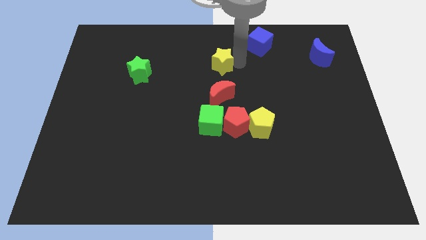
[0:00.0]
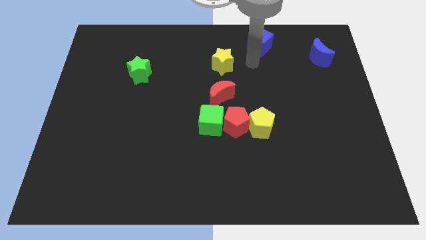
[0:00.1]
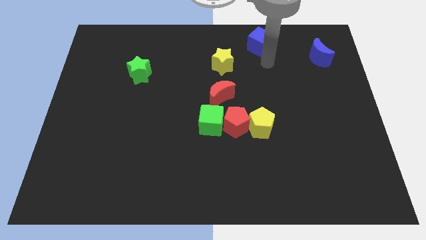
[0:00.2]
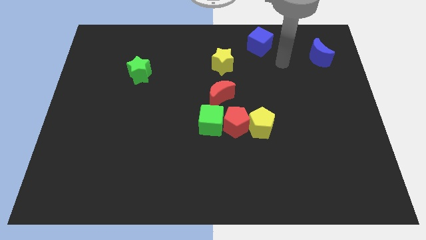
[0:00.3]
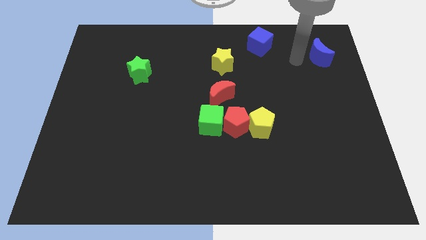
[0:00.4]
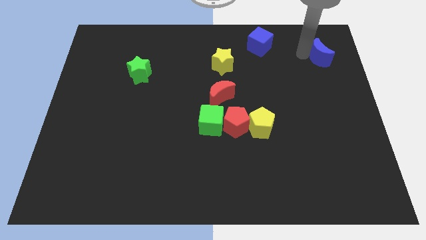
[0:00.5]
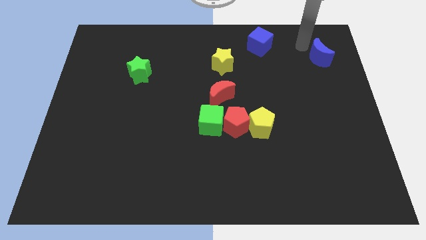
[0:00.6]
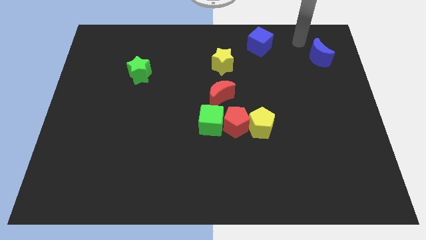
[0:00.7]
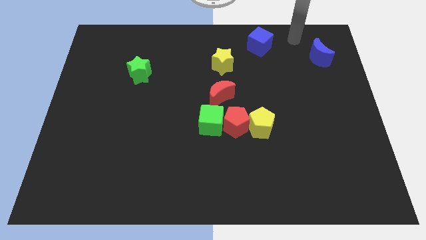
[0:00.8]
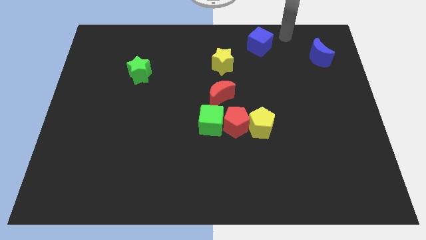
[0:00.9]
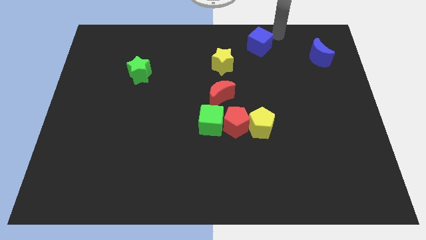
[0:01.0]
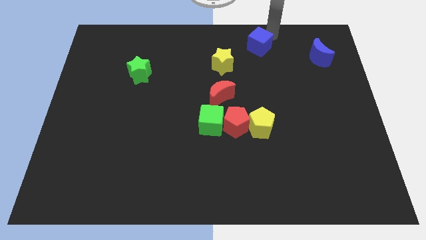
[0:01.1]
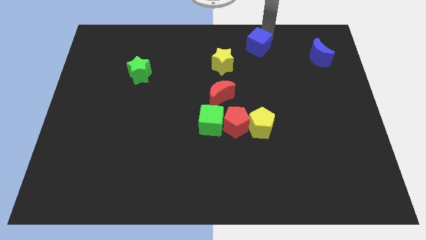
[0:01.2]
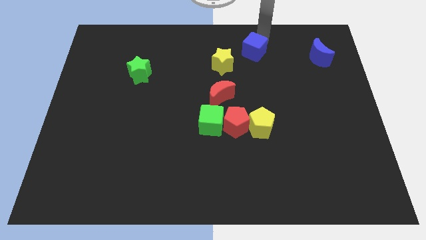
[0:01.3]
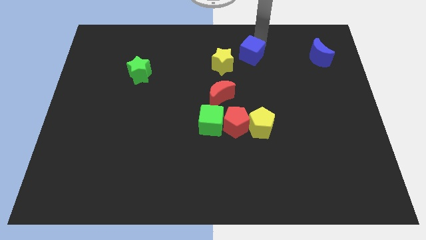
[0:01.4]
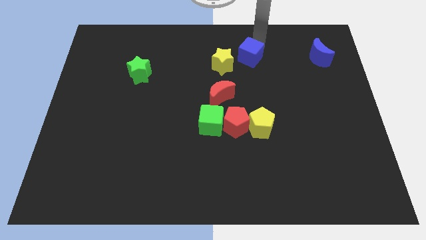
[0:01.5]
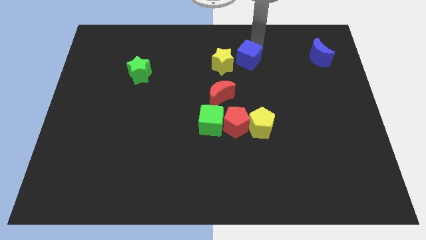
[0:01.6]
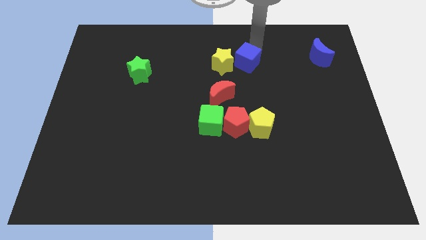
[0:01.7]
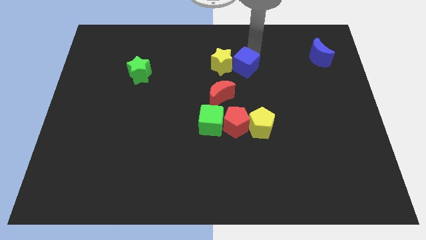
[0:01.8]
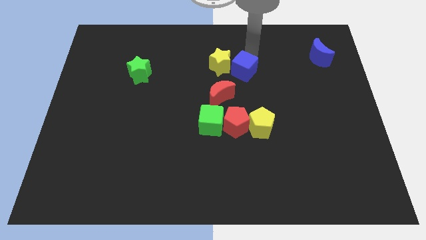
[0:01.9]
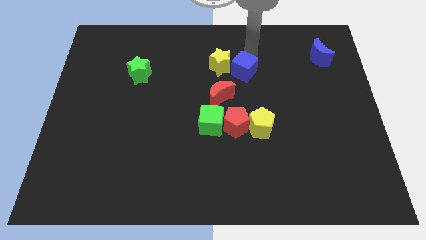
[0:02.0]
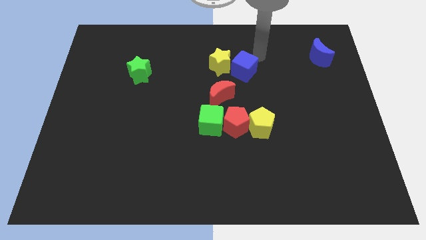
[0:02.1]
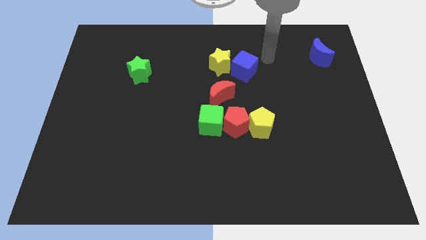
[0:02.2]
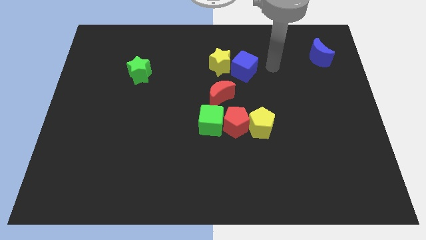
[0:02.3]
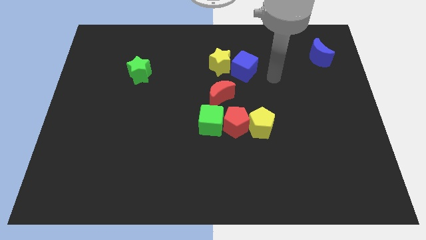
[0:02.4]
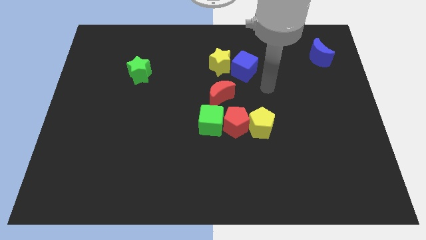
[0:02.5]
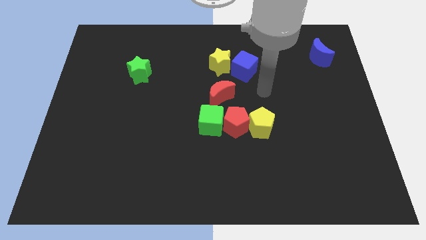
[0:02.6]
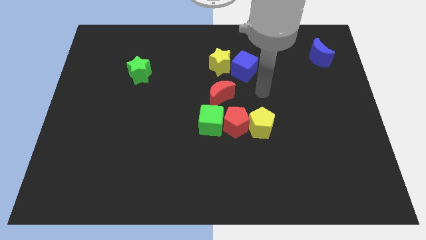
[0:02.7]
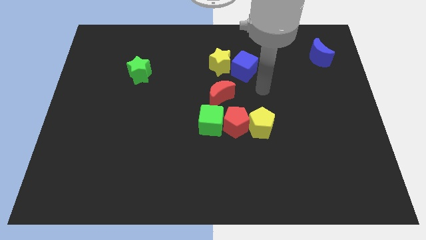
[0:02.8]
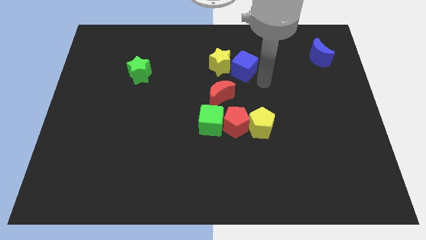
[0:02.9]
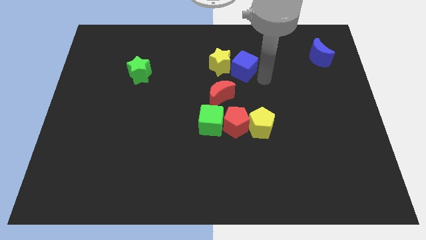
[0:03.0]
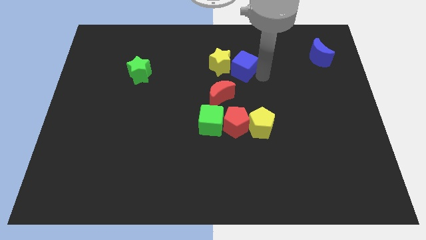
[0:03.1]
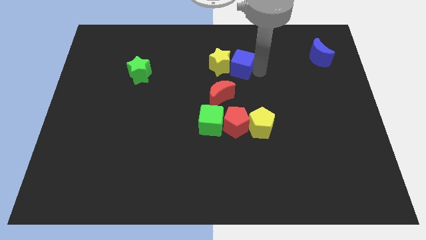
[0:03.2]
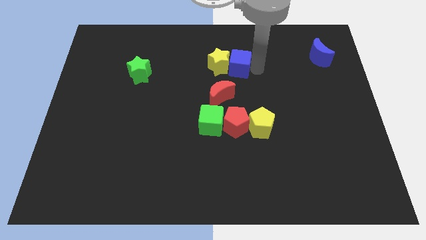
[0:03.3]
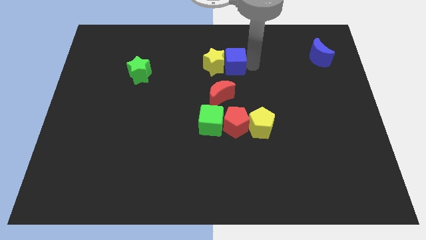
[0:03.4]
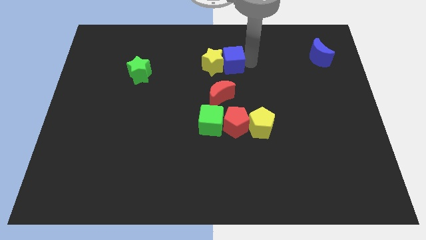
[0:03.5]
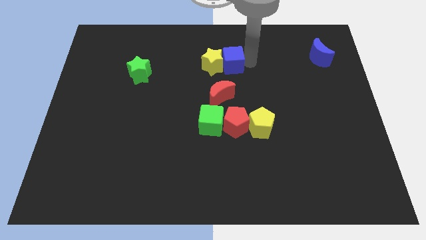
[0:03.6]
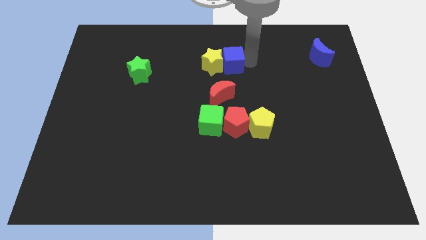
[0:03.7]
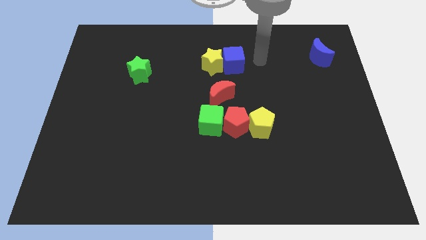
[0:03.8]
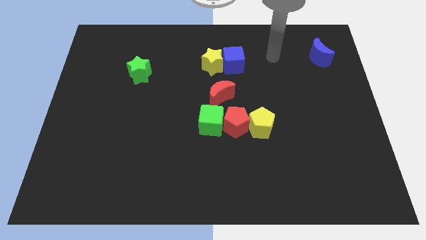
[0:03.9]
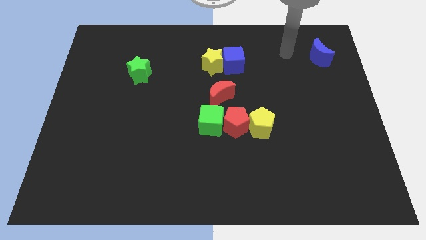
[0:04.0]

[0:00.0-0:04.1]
place the blue cube to the right of the yellow star

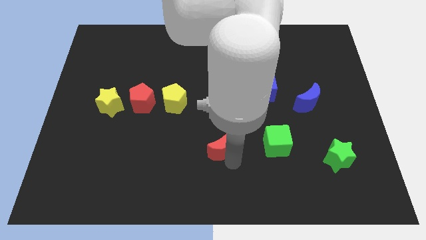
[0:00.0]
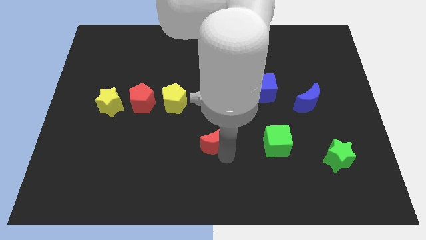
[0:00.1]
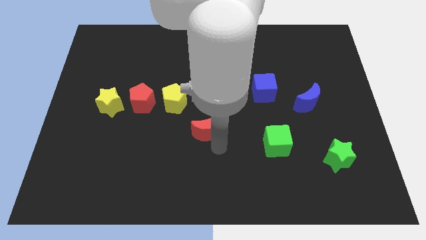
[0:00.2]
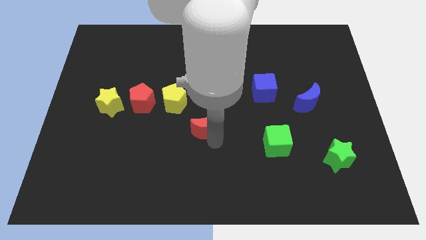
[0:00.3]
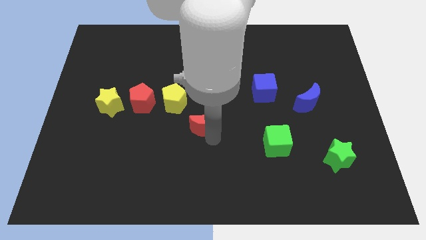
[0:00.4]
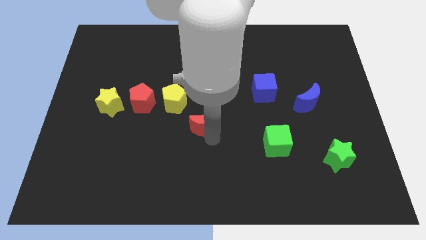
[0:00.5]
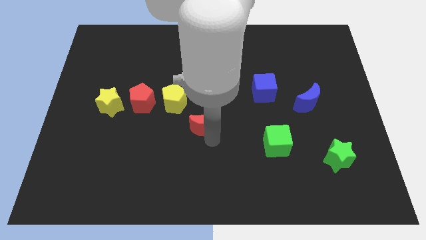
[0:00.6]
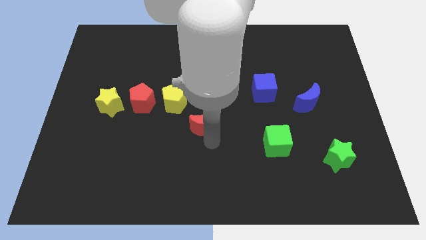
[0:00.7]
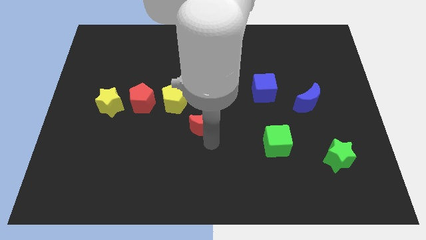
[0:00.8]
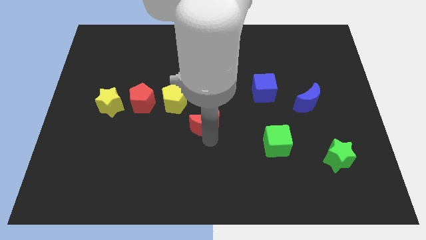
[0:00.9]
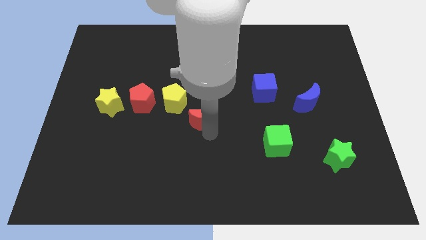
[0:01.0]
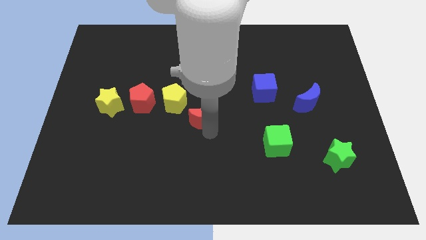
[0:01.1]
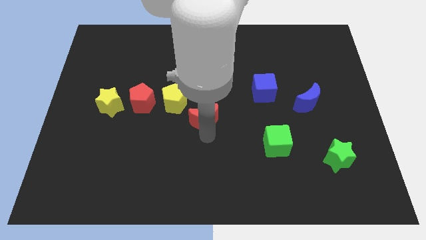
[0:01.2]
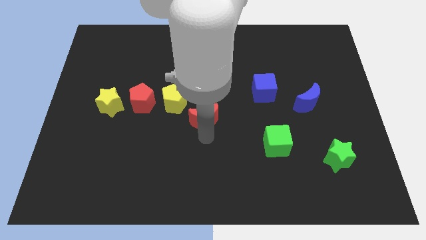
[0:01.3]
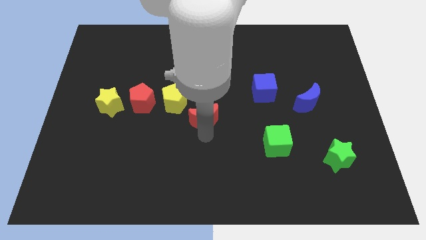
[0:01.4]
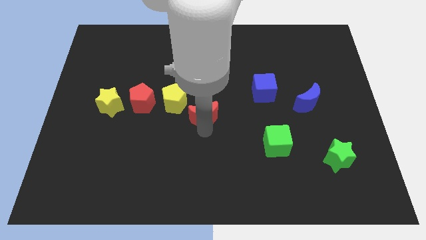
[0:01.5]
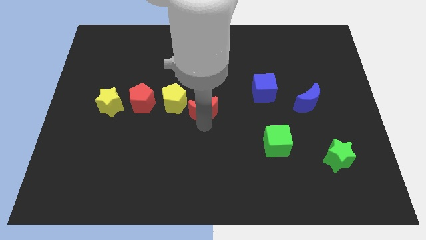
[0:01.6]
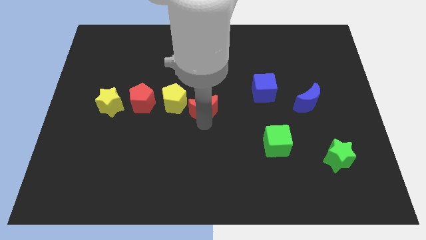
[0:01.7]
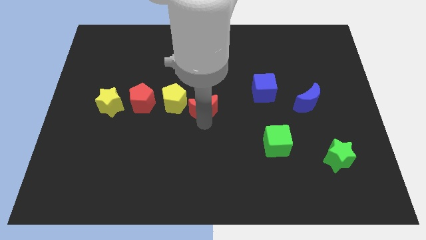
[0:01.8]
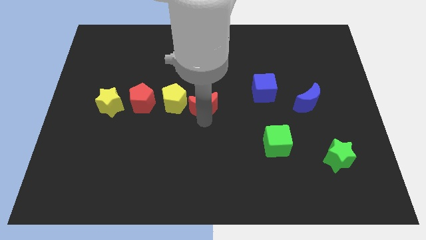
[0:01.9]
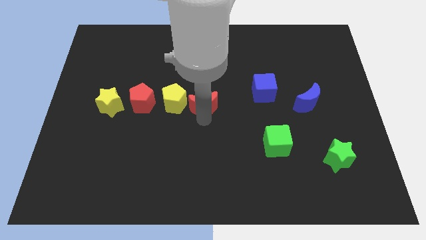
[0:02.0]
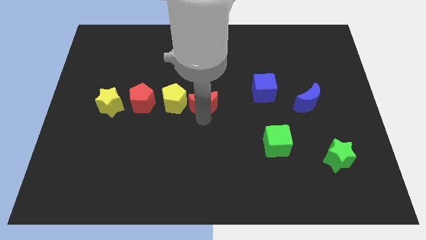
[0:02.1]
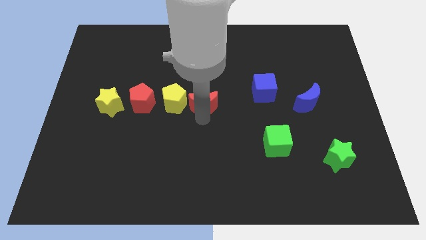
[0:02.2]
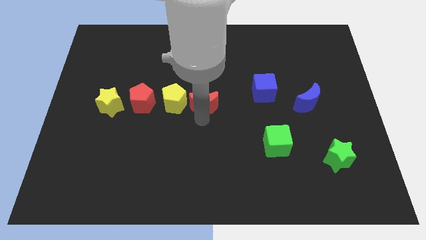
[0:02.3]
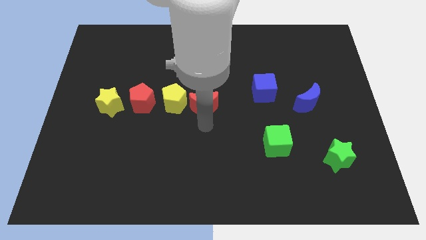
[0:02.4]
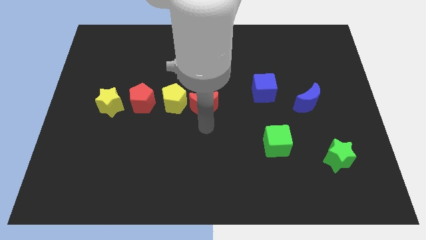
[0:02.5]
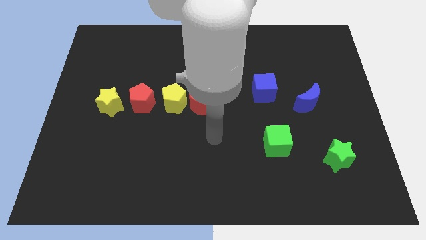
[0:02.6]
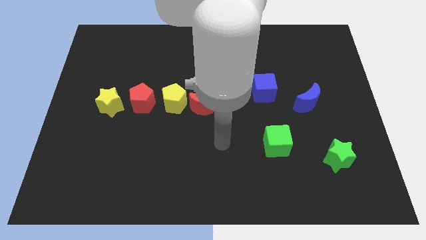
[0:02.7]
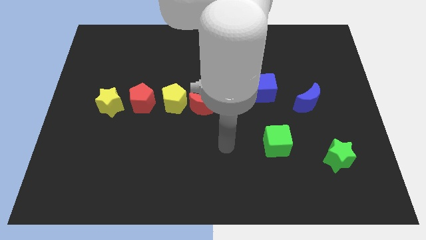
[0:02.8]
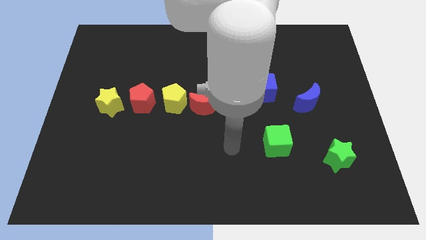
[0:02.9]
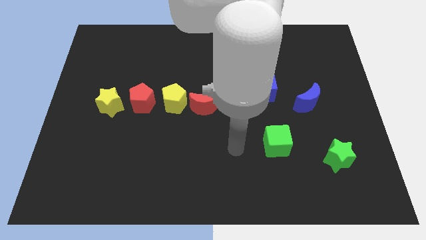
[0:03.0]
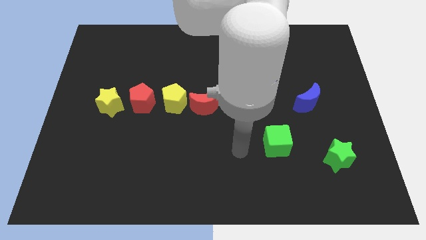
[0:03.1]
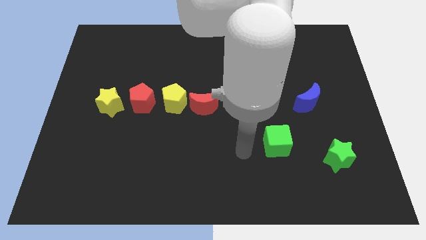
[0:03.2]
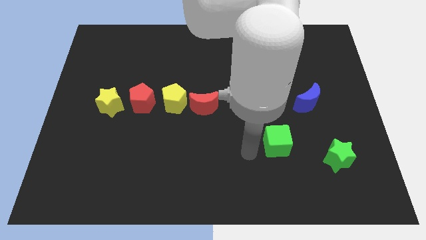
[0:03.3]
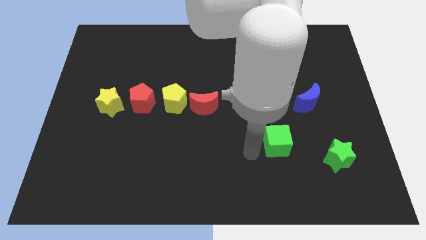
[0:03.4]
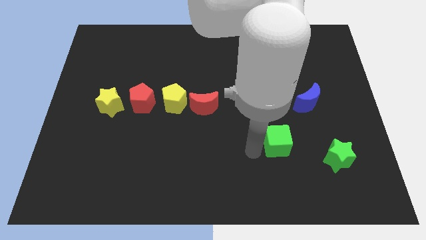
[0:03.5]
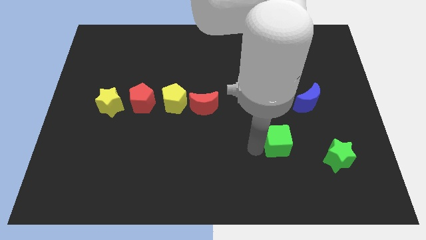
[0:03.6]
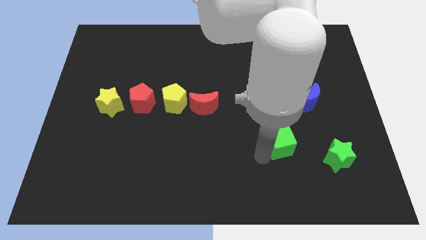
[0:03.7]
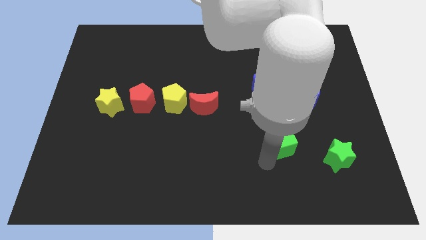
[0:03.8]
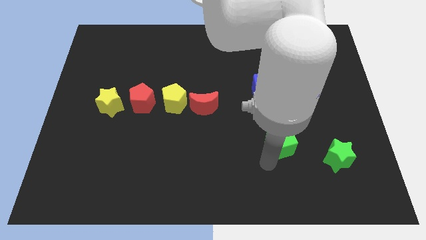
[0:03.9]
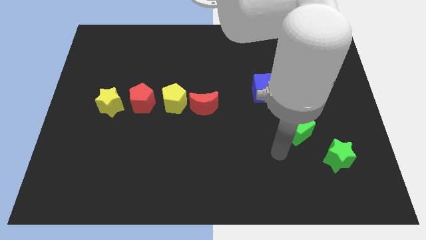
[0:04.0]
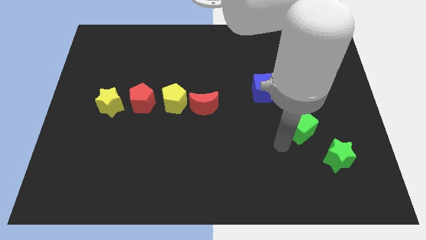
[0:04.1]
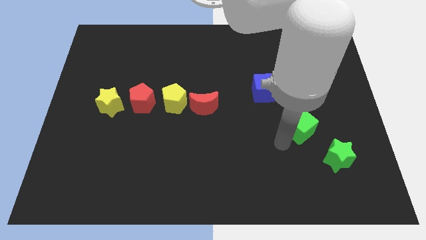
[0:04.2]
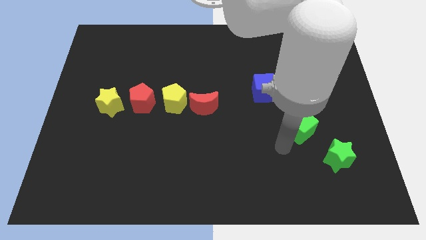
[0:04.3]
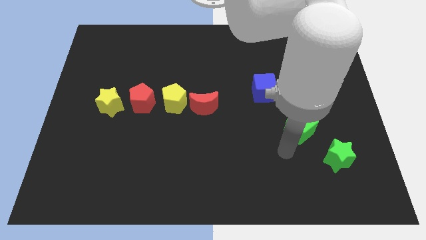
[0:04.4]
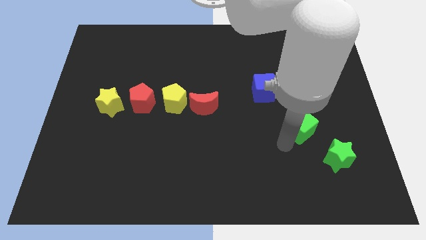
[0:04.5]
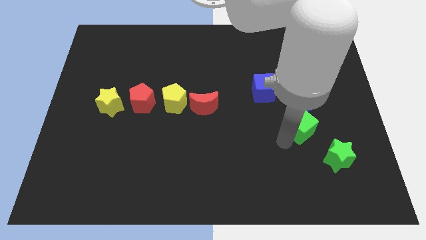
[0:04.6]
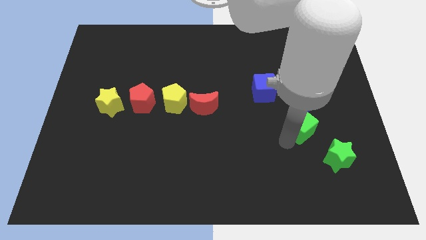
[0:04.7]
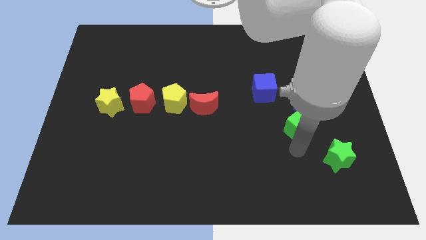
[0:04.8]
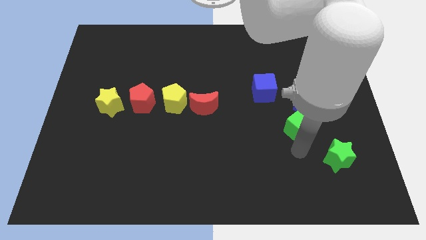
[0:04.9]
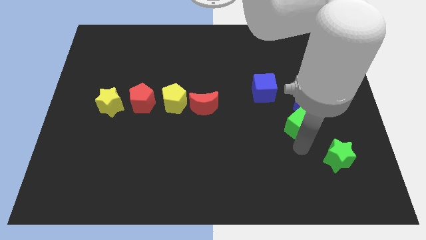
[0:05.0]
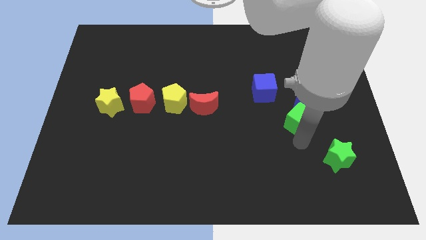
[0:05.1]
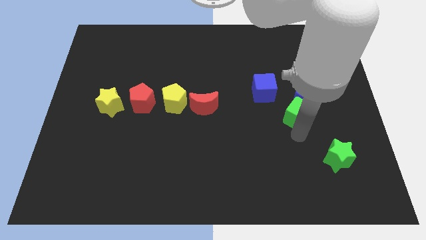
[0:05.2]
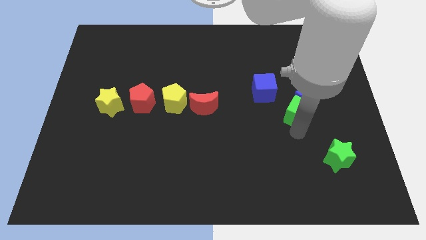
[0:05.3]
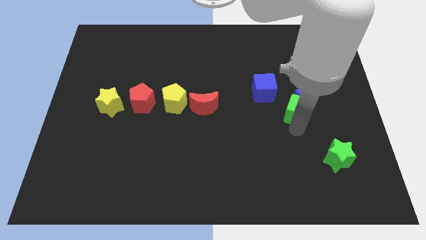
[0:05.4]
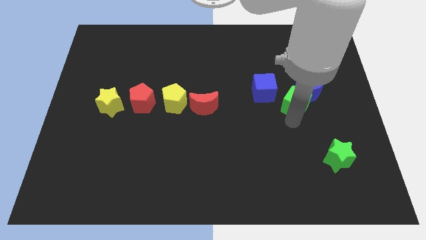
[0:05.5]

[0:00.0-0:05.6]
place the red moon near to yellow pentagon
